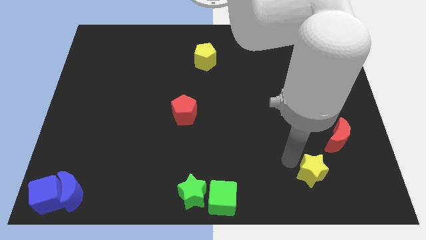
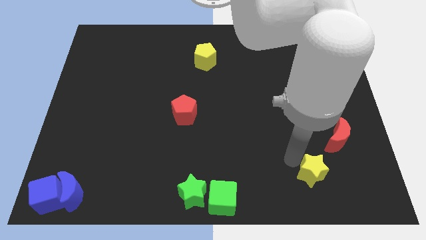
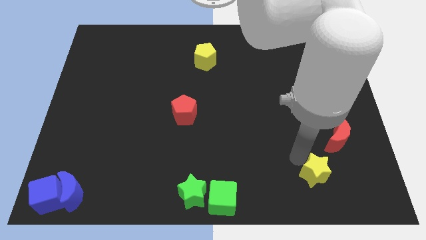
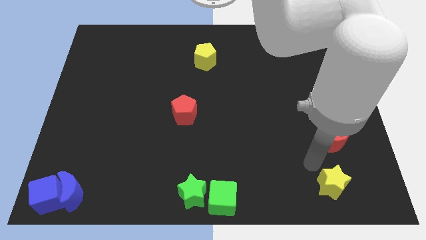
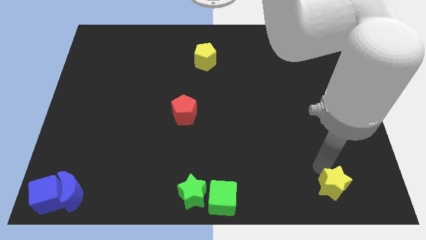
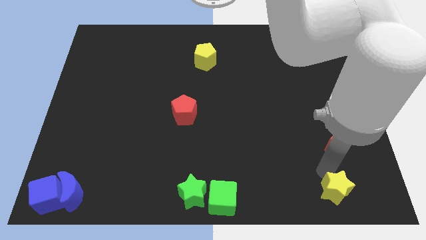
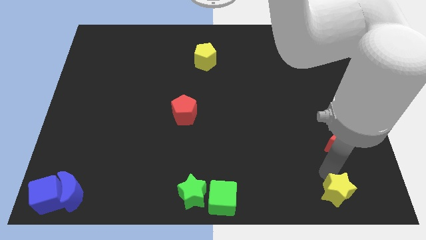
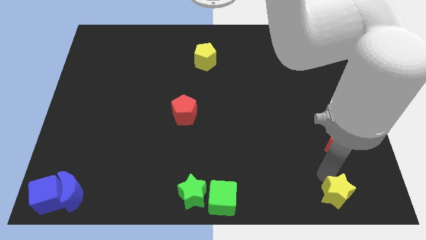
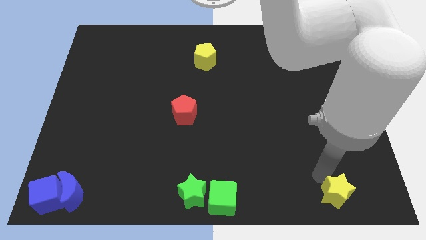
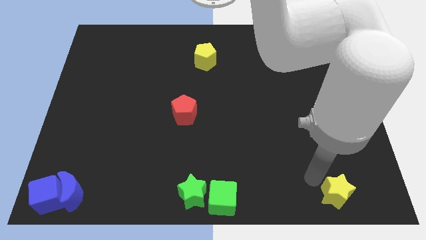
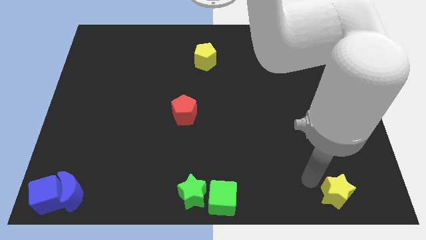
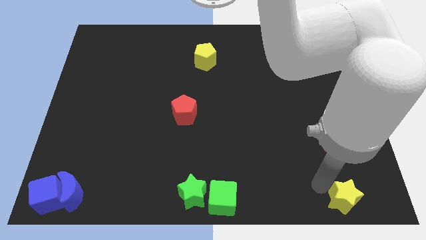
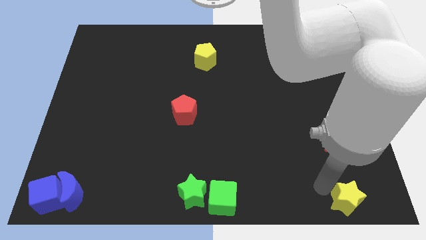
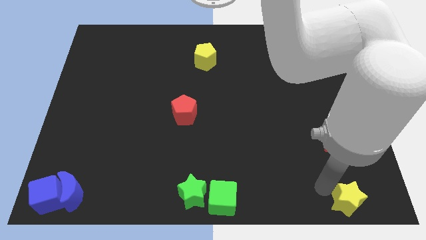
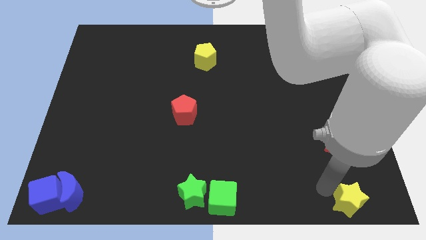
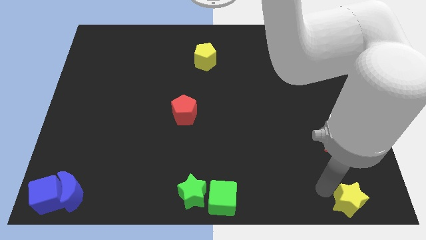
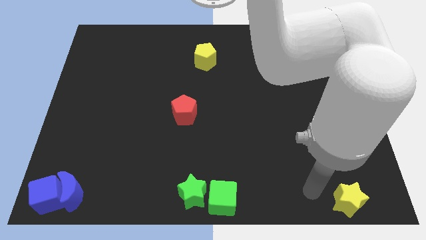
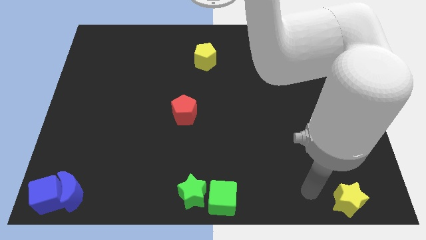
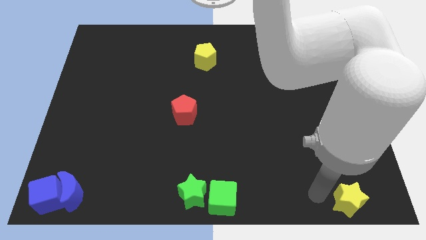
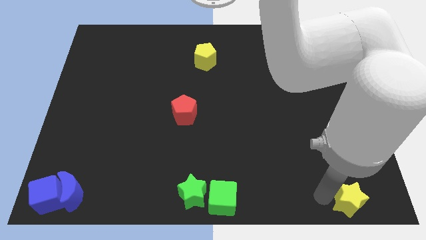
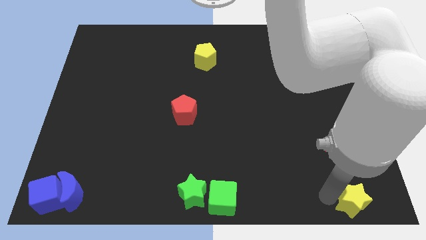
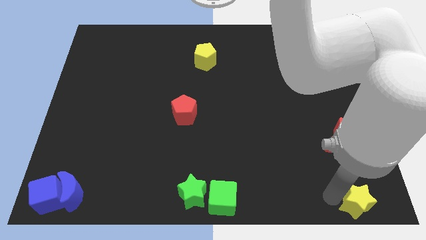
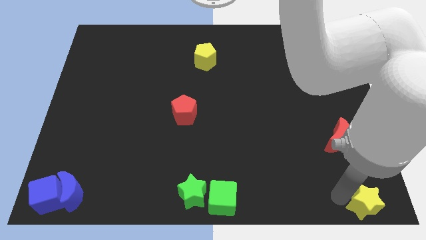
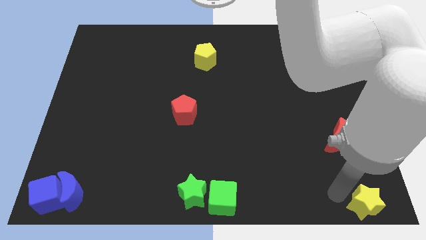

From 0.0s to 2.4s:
place the yellow star towards the bottom right corner

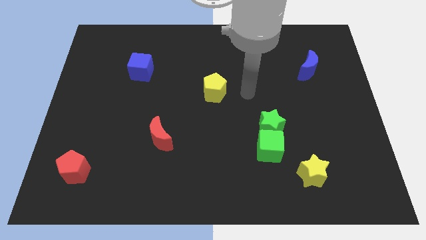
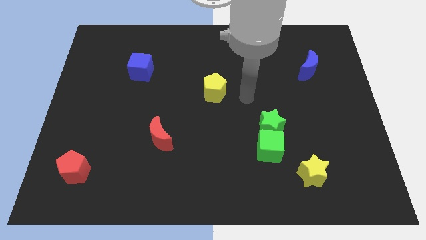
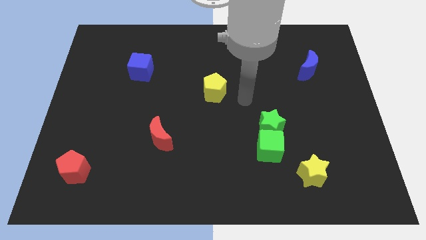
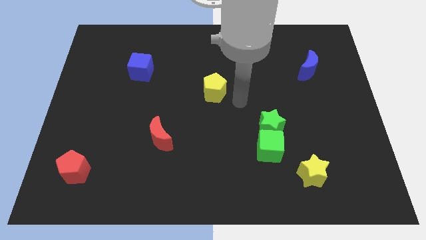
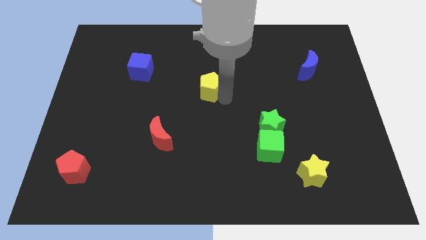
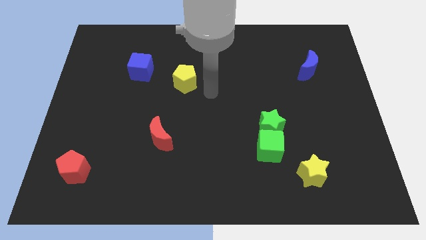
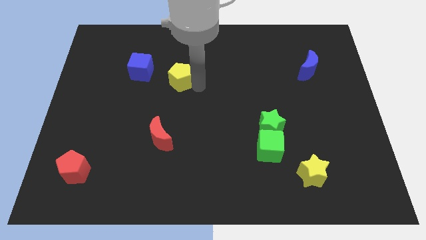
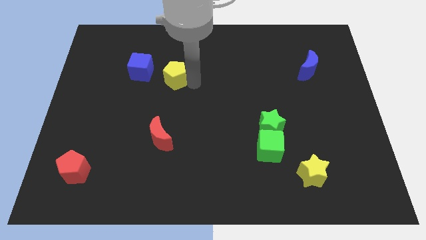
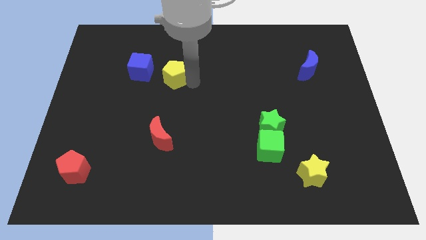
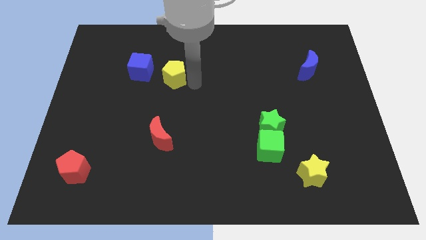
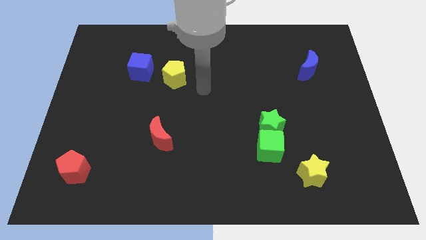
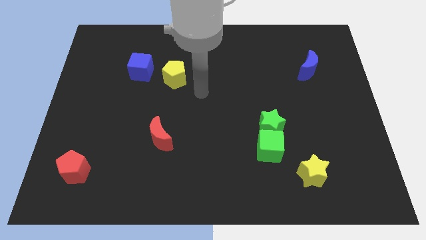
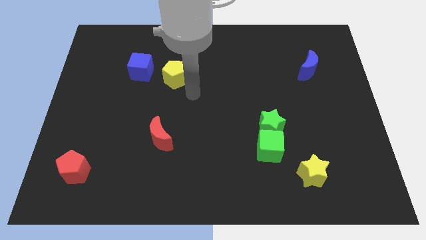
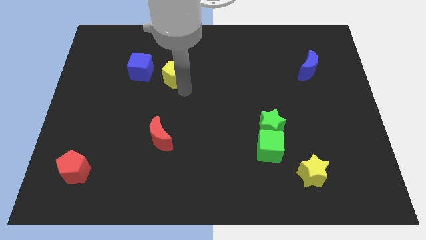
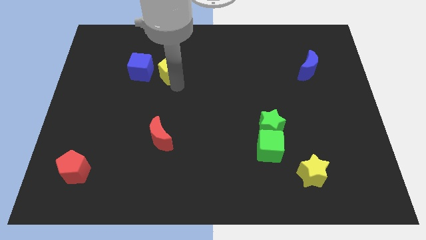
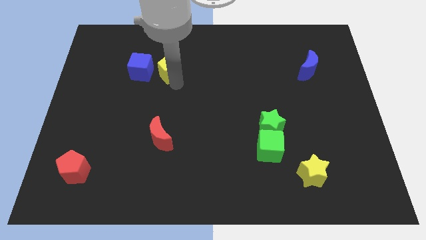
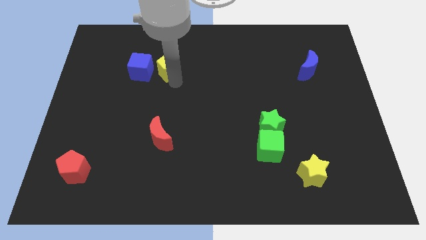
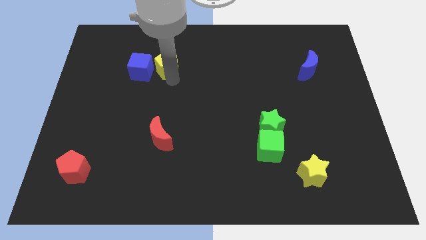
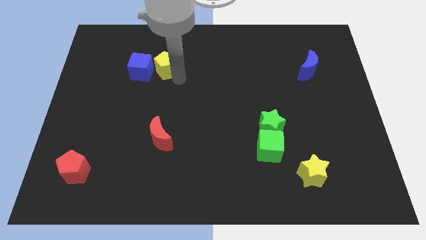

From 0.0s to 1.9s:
move the yellow pentagon to the right of the blue cube

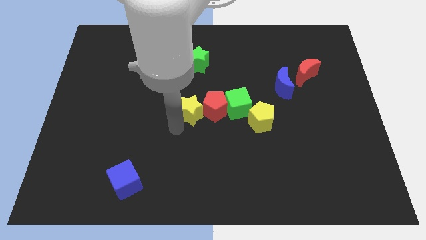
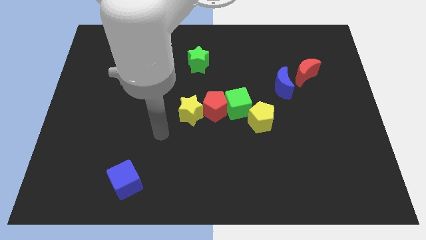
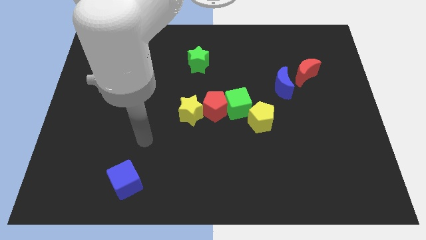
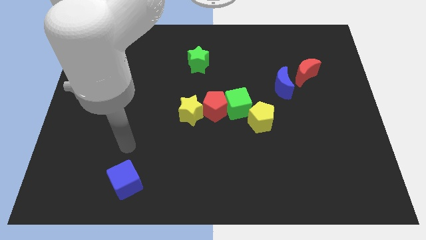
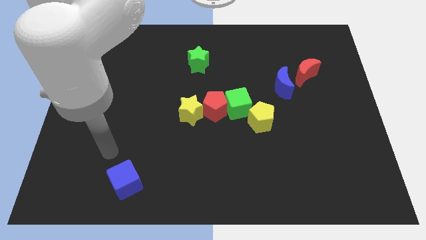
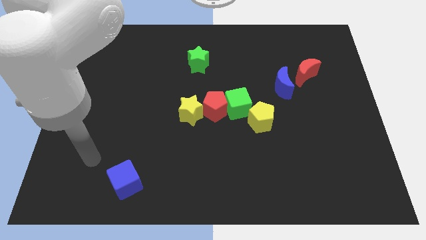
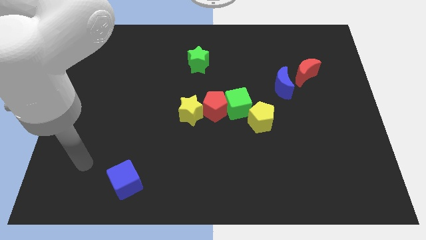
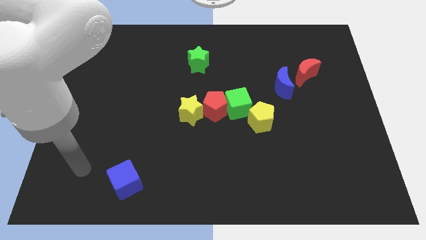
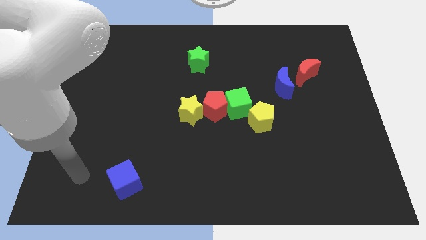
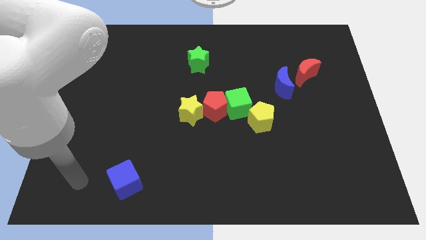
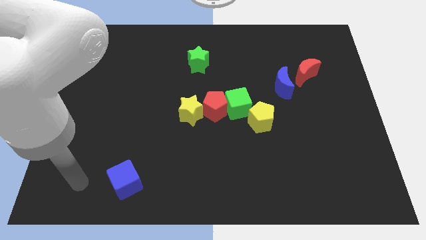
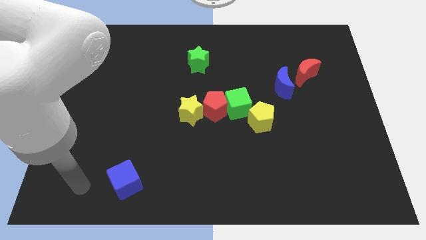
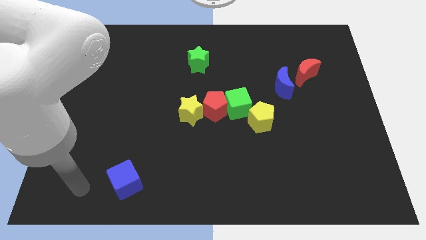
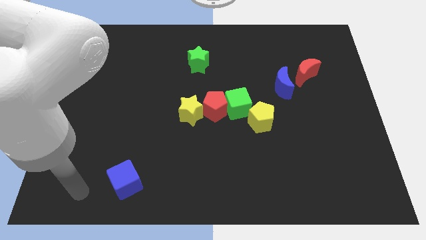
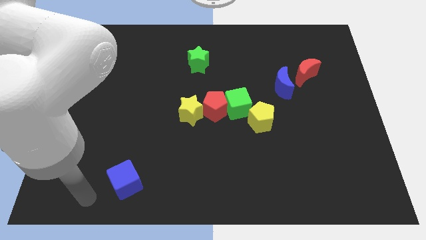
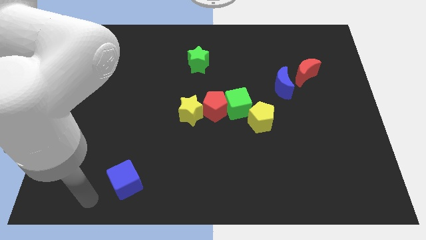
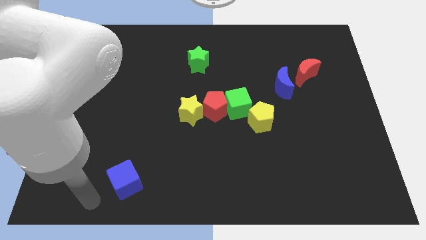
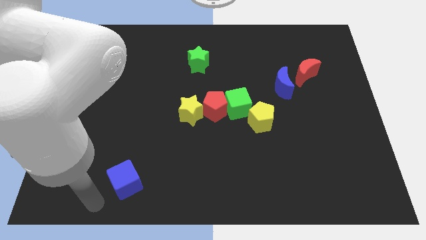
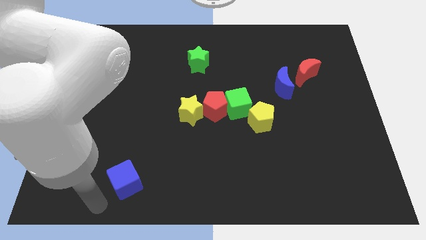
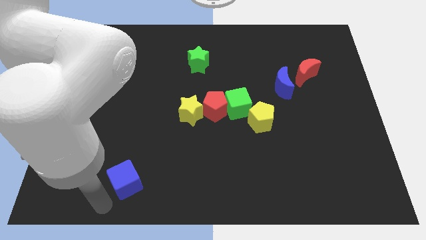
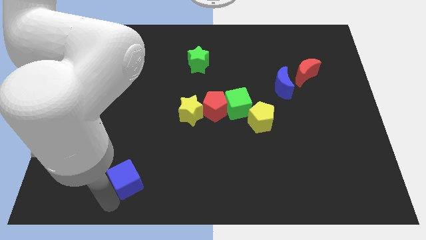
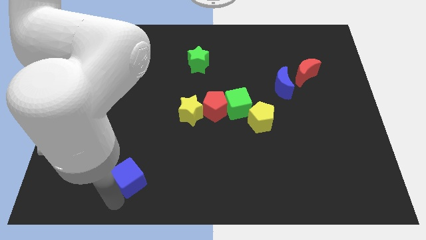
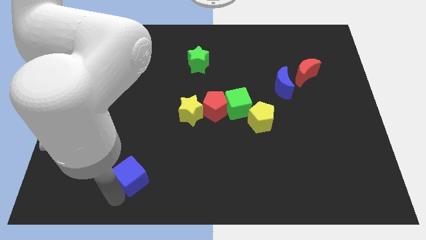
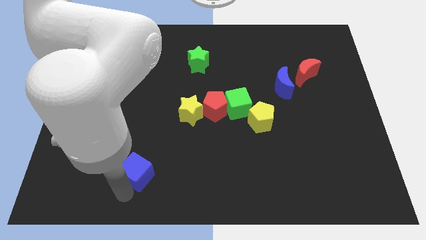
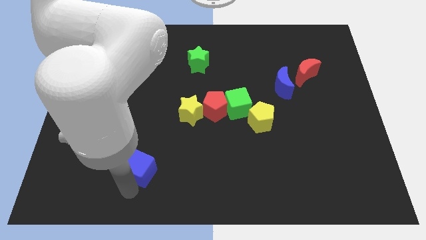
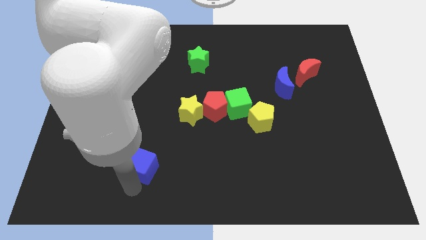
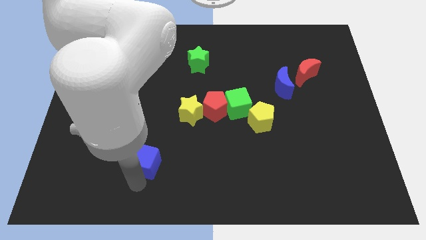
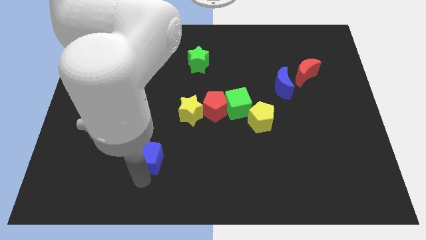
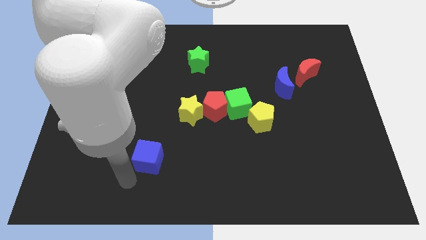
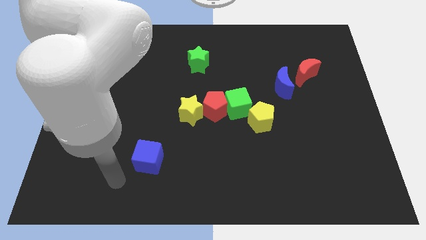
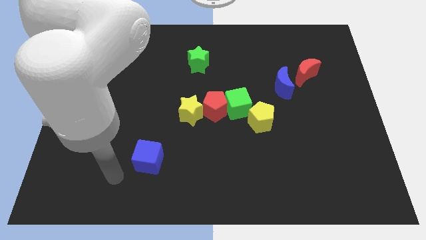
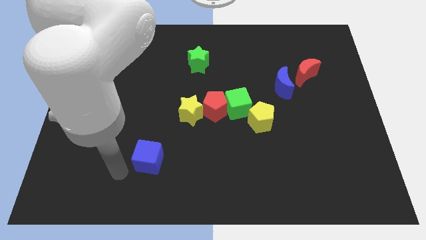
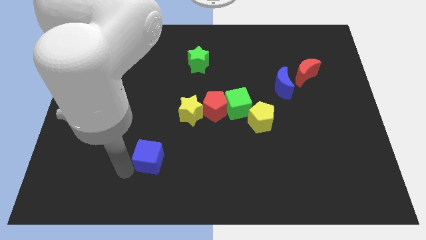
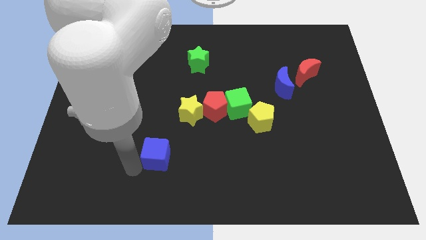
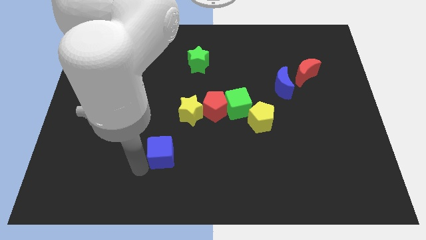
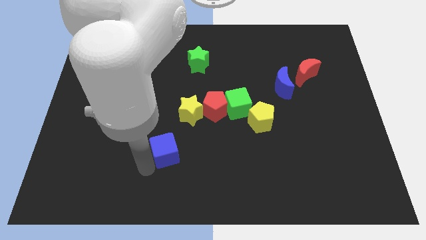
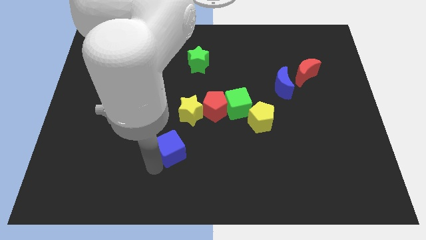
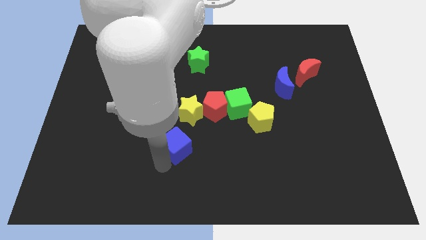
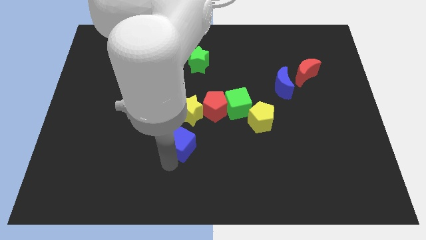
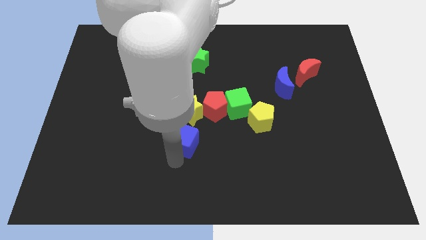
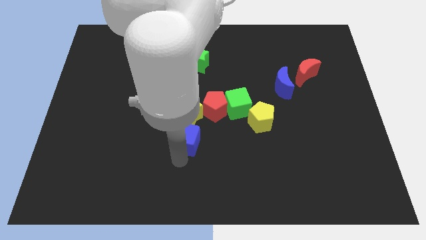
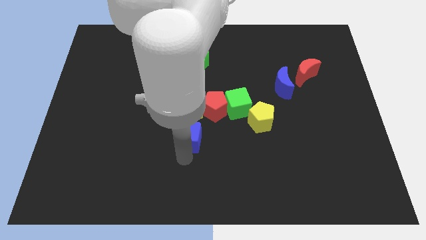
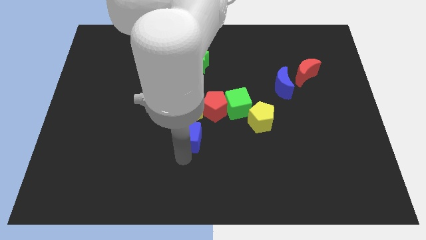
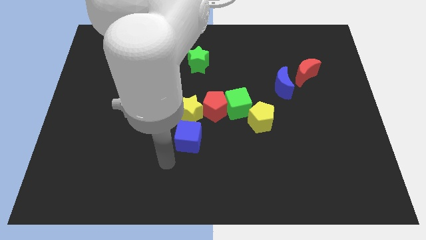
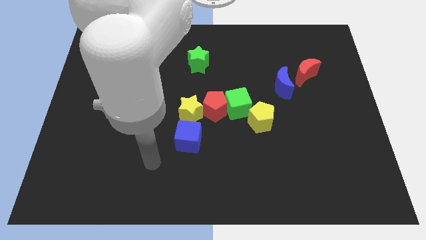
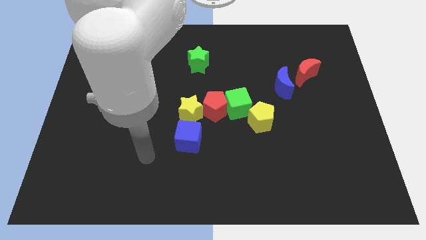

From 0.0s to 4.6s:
push the blue cube to the bottom of the yellow star

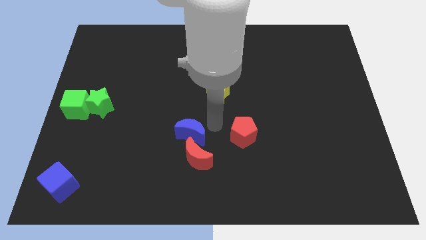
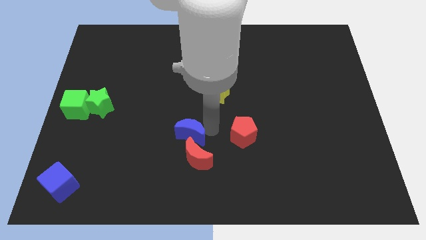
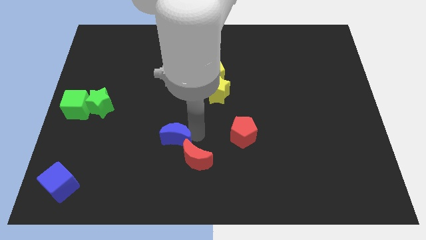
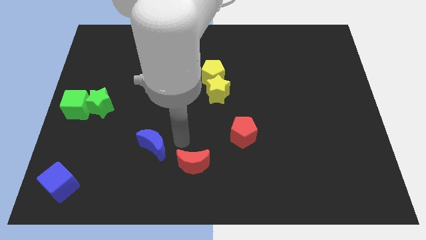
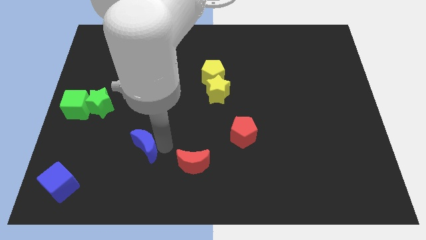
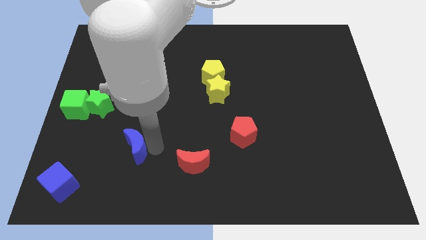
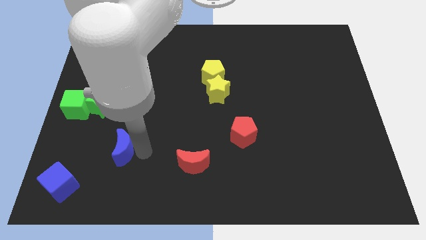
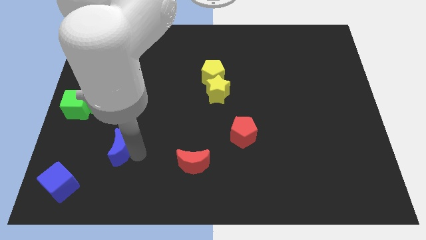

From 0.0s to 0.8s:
move the blue crescent to the left of the red crescent
